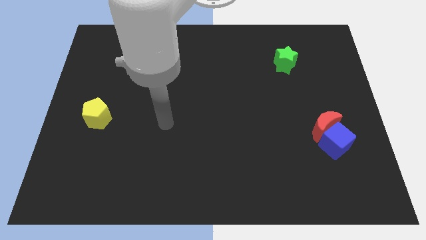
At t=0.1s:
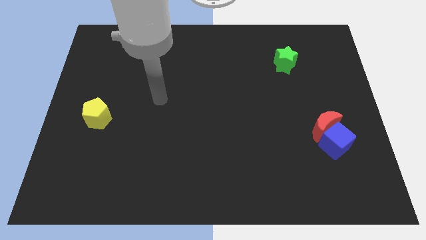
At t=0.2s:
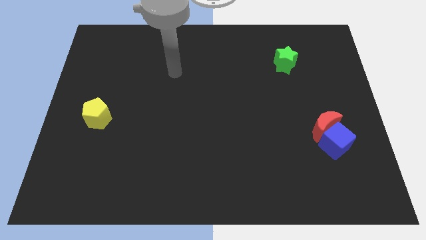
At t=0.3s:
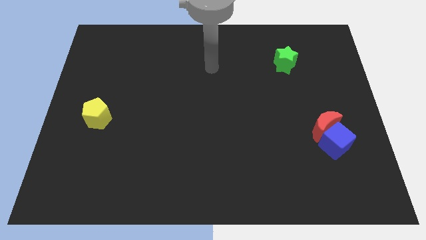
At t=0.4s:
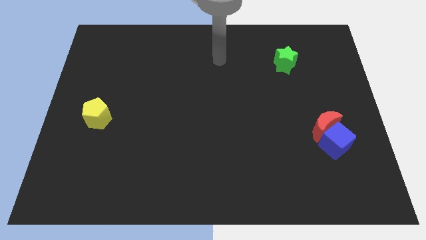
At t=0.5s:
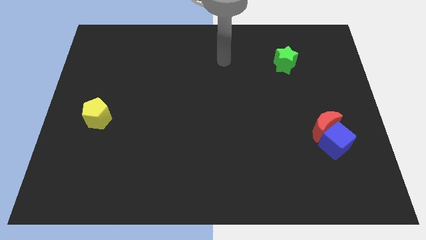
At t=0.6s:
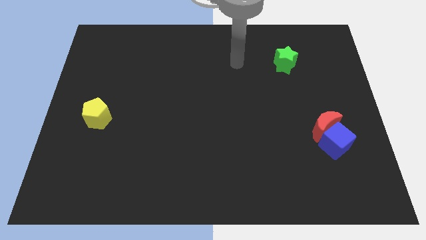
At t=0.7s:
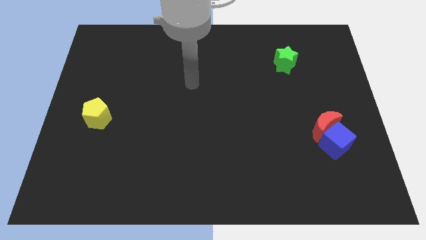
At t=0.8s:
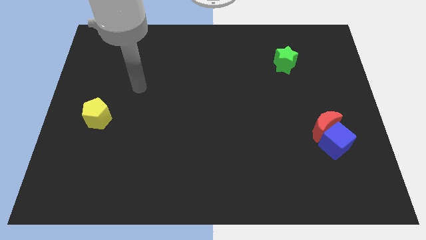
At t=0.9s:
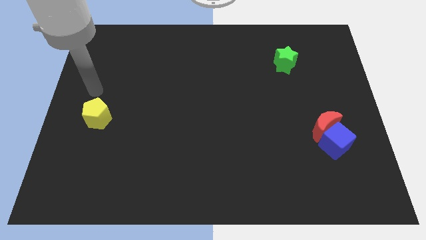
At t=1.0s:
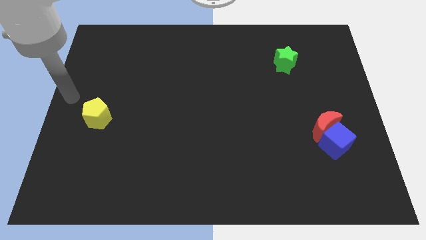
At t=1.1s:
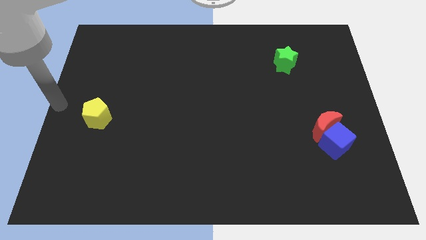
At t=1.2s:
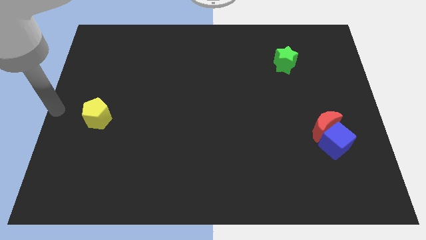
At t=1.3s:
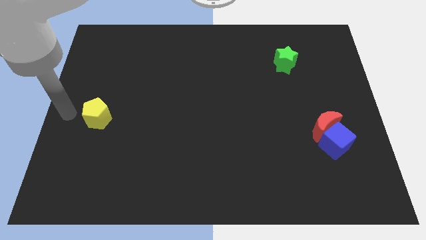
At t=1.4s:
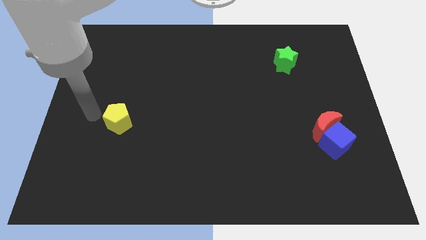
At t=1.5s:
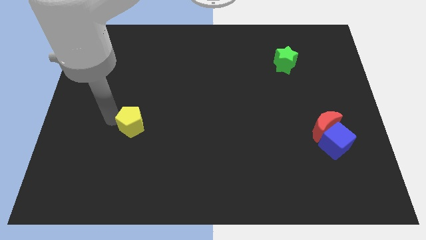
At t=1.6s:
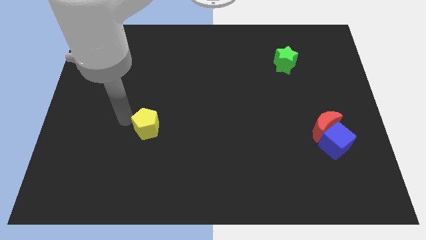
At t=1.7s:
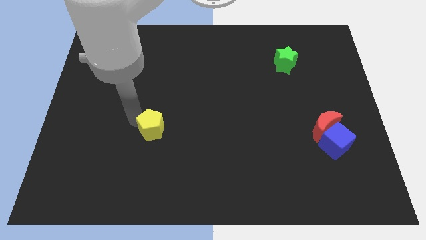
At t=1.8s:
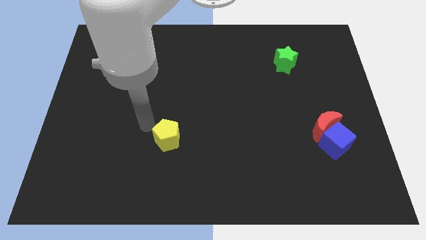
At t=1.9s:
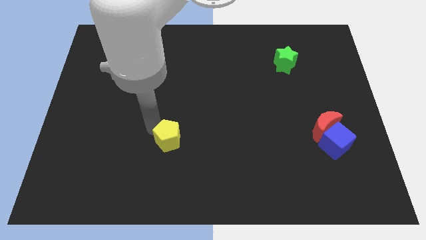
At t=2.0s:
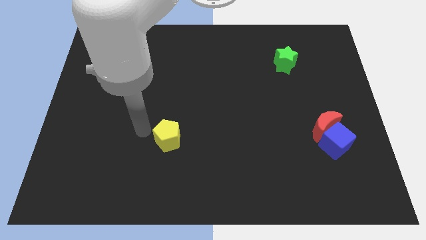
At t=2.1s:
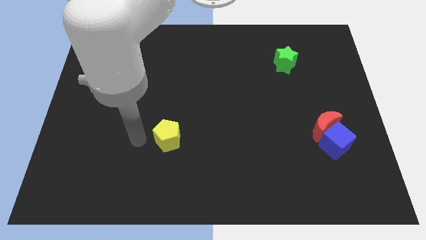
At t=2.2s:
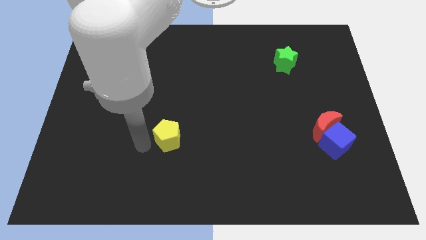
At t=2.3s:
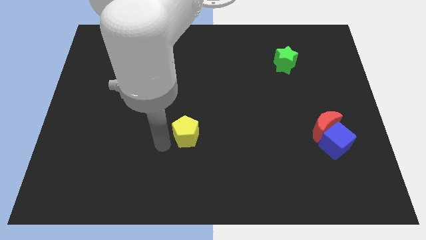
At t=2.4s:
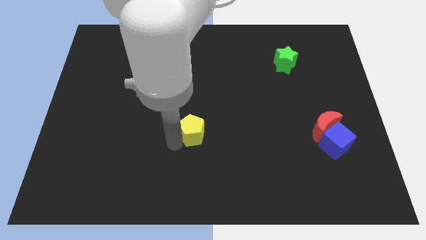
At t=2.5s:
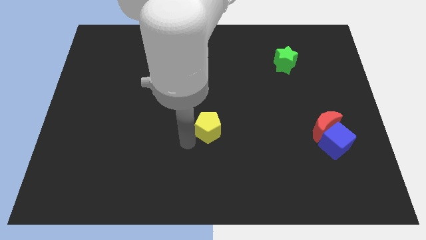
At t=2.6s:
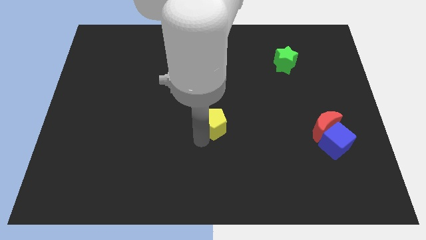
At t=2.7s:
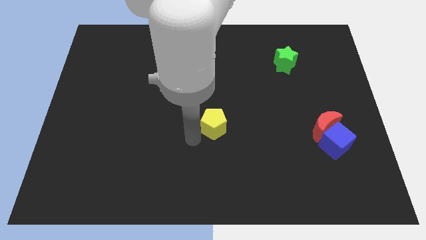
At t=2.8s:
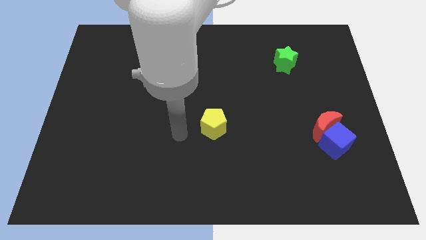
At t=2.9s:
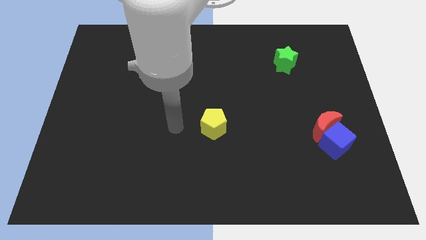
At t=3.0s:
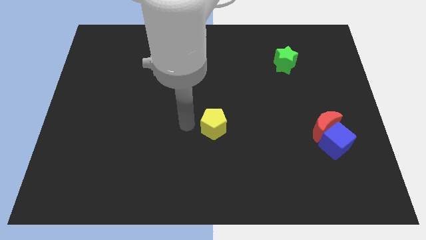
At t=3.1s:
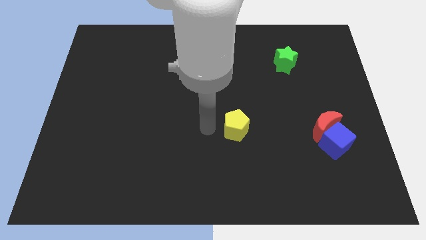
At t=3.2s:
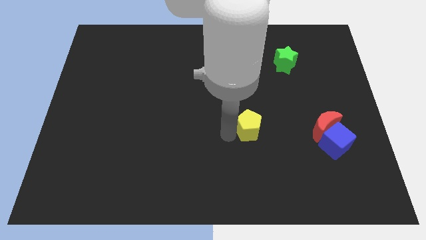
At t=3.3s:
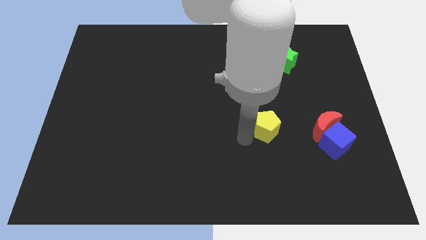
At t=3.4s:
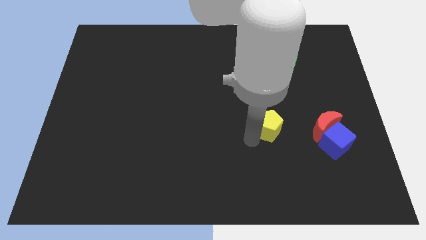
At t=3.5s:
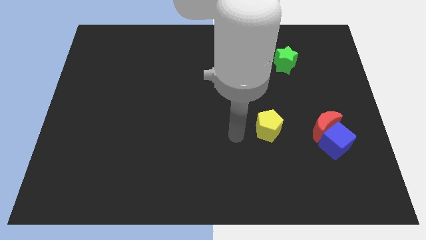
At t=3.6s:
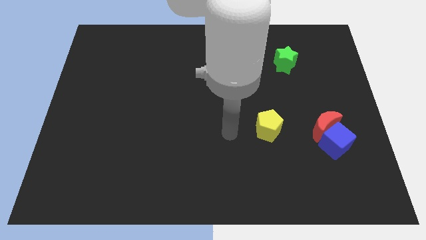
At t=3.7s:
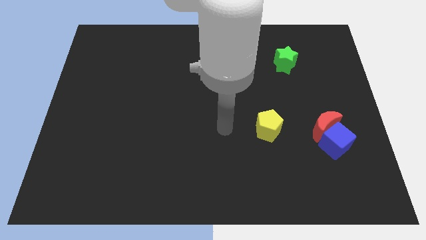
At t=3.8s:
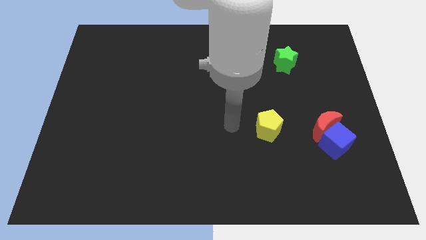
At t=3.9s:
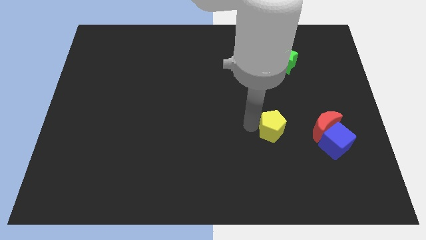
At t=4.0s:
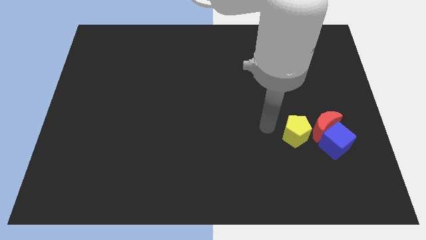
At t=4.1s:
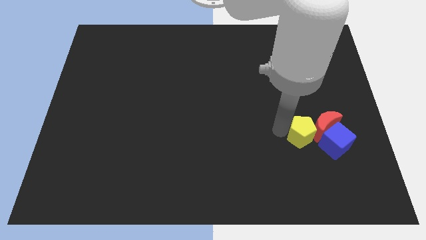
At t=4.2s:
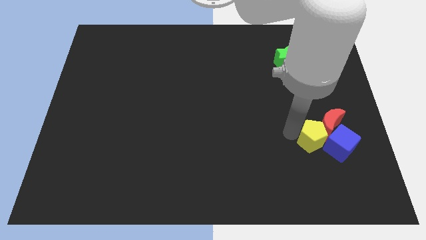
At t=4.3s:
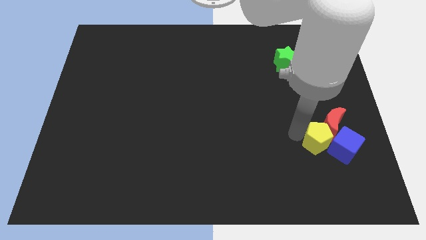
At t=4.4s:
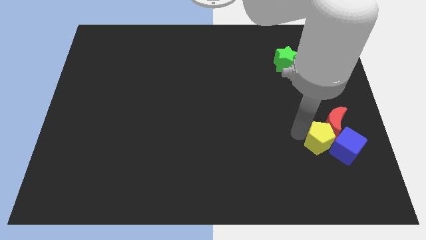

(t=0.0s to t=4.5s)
push the yellow pentagon towards the blue block

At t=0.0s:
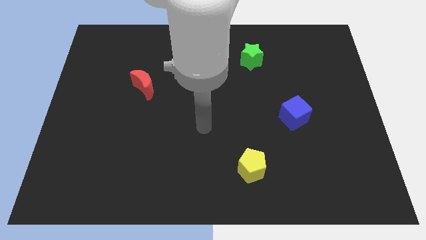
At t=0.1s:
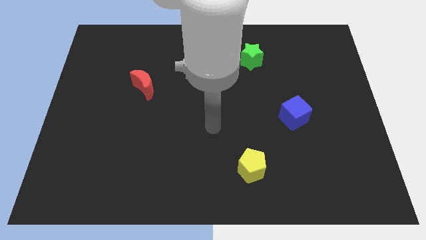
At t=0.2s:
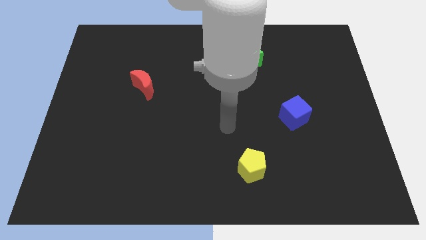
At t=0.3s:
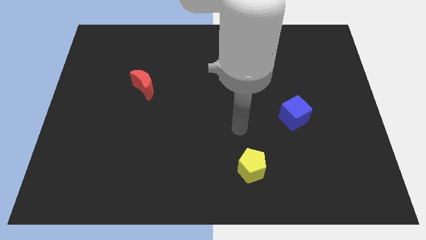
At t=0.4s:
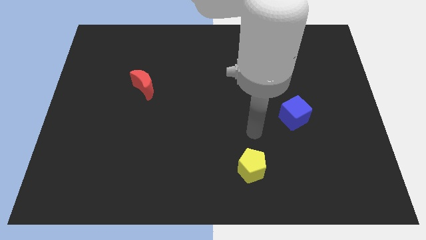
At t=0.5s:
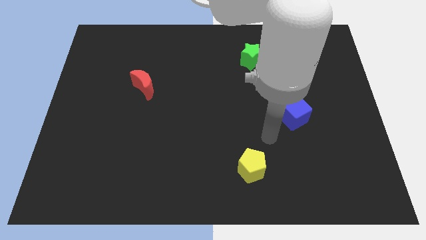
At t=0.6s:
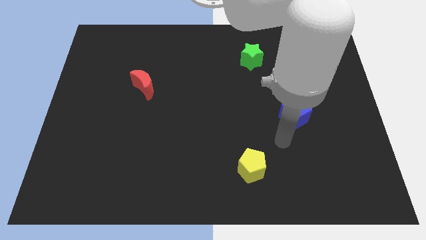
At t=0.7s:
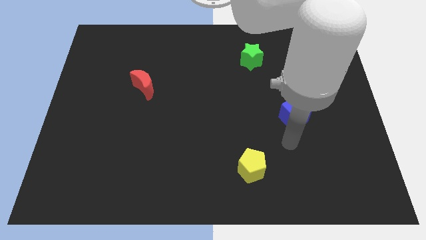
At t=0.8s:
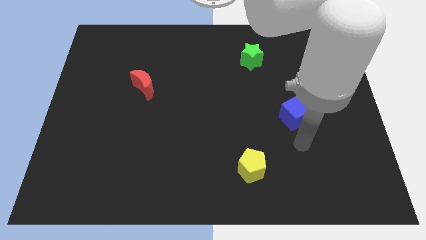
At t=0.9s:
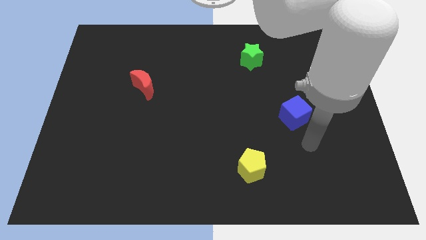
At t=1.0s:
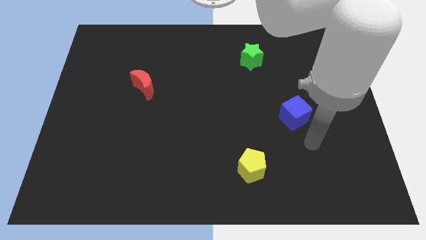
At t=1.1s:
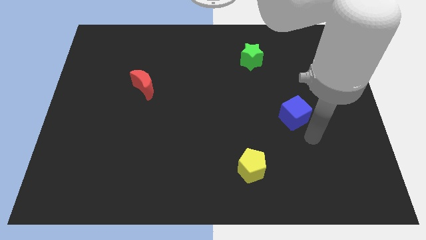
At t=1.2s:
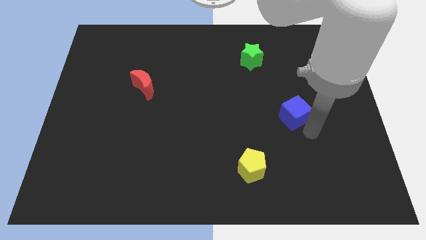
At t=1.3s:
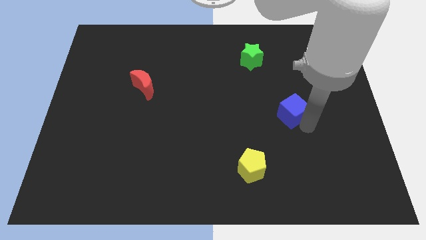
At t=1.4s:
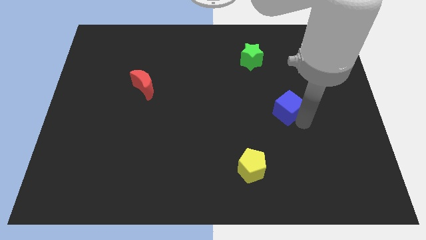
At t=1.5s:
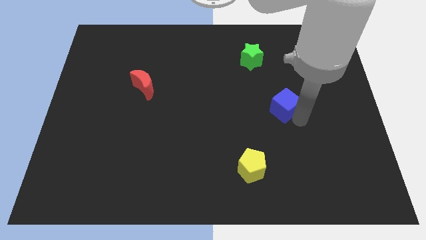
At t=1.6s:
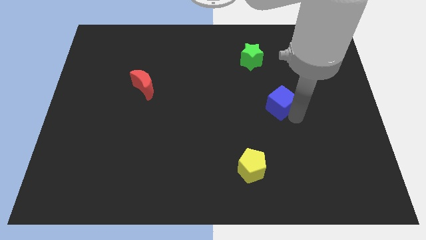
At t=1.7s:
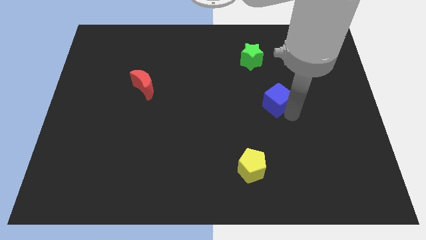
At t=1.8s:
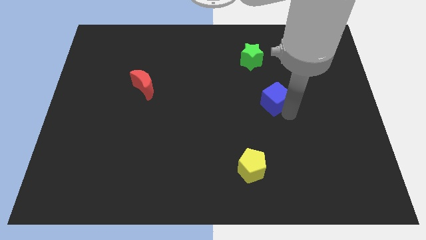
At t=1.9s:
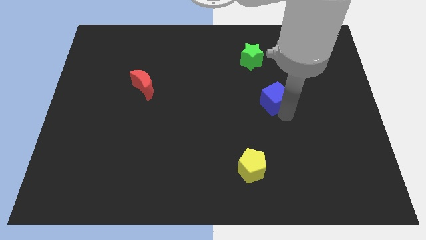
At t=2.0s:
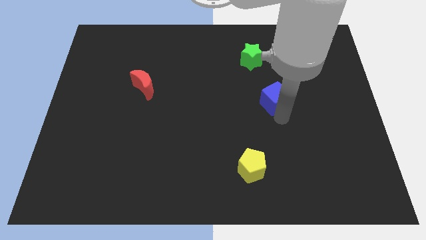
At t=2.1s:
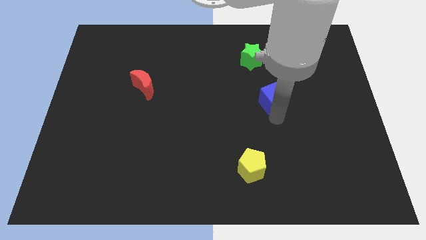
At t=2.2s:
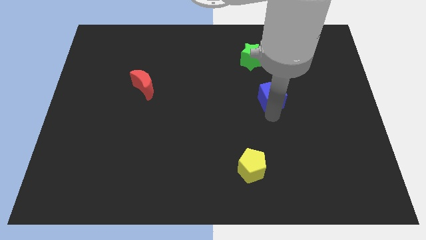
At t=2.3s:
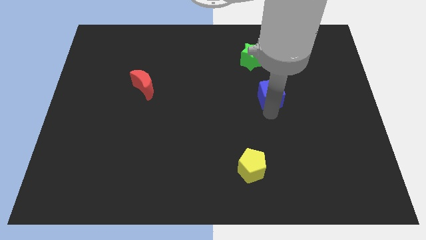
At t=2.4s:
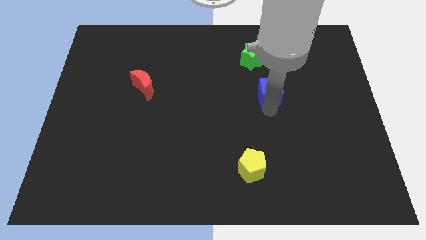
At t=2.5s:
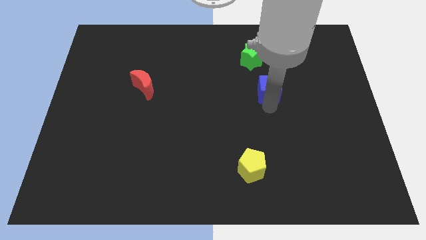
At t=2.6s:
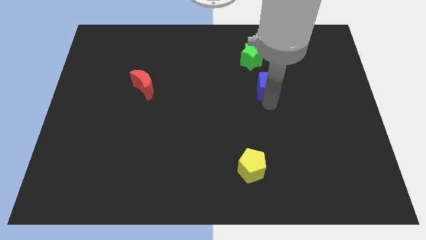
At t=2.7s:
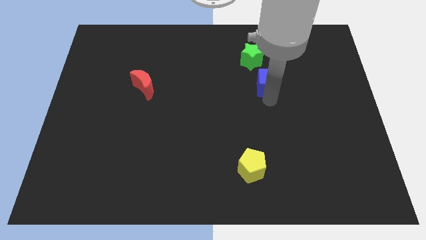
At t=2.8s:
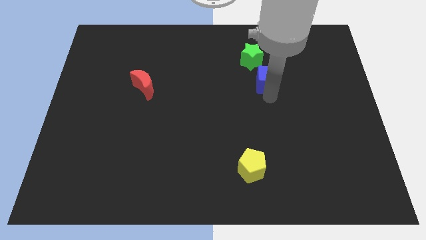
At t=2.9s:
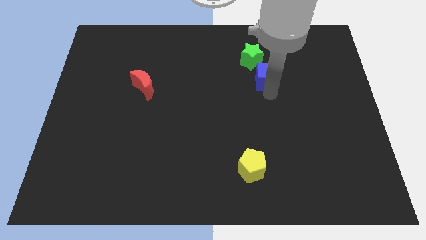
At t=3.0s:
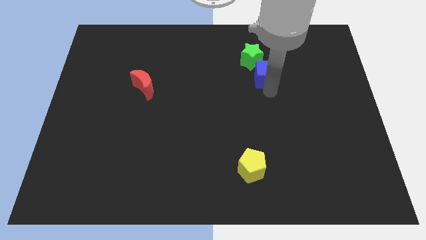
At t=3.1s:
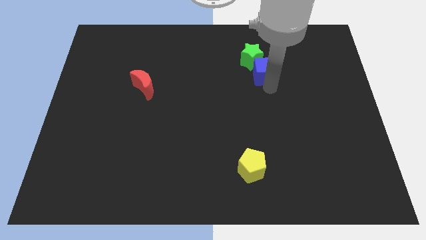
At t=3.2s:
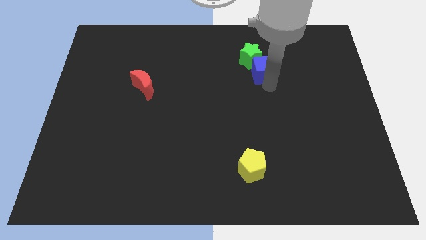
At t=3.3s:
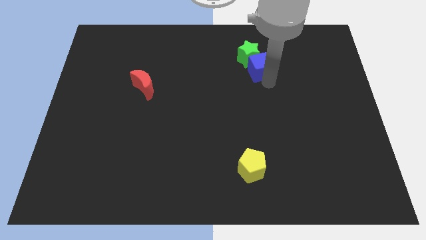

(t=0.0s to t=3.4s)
slide the cube next to the green block

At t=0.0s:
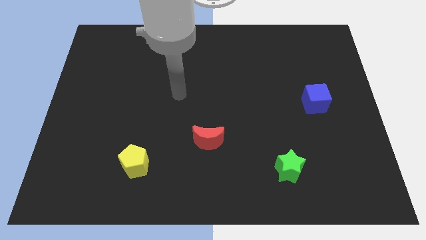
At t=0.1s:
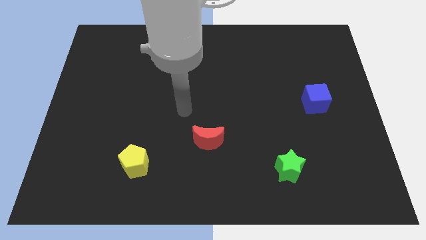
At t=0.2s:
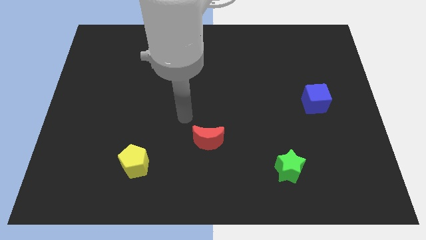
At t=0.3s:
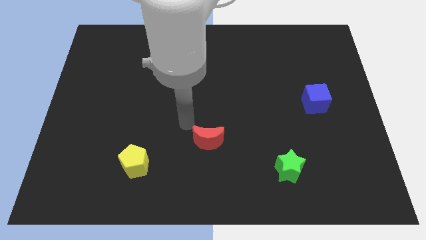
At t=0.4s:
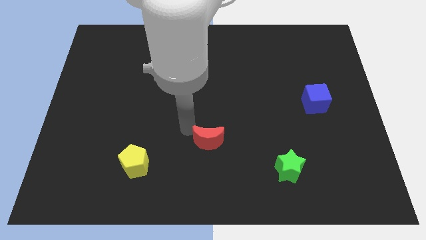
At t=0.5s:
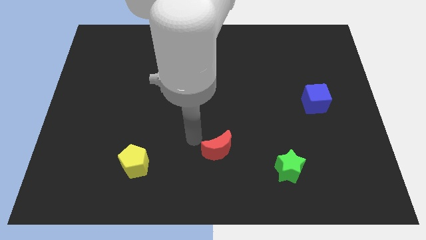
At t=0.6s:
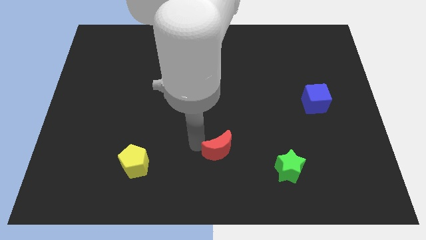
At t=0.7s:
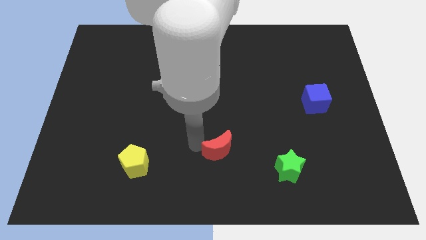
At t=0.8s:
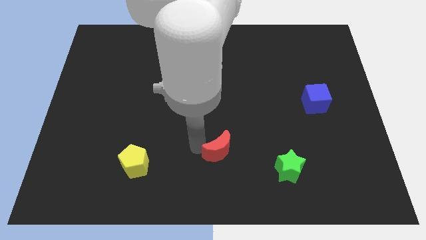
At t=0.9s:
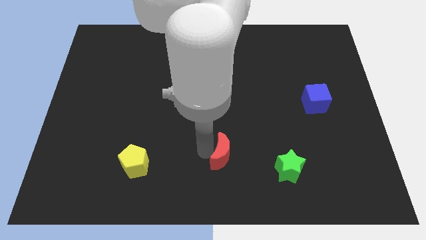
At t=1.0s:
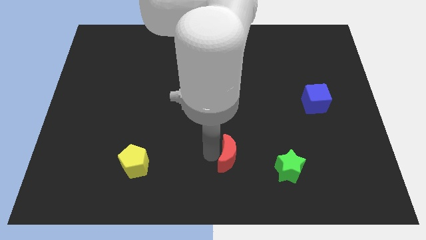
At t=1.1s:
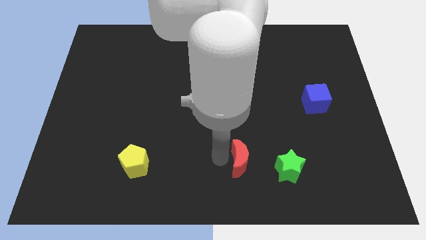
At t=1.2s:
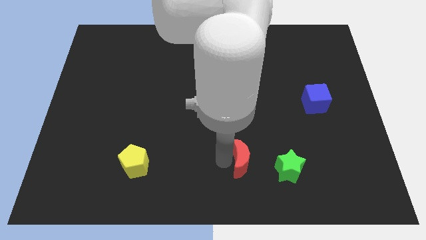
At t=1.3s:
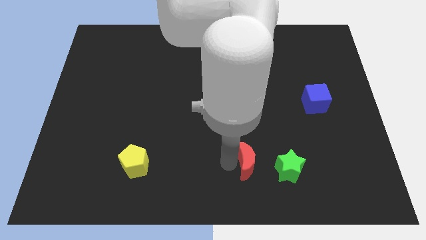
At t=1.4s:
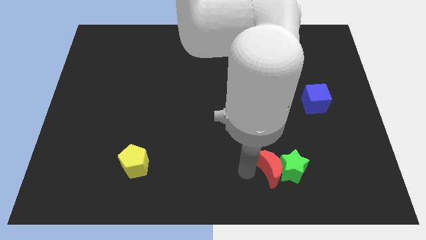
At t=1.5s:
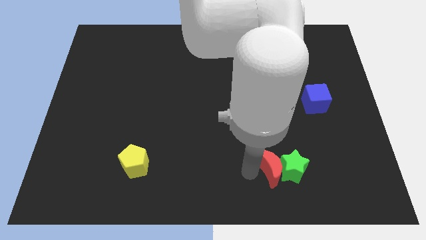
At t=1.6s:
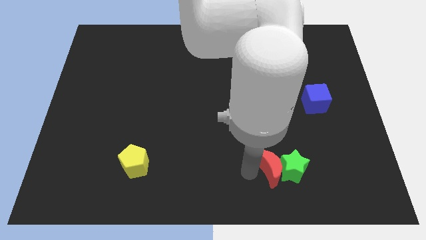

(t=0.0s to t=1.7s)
move the moon close to the green star
